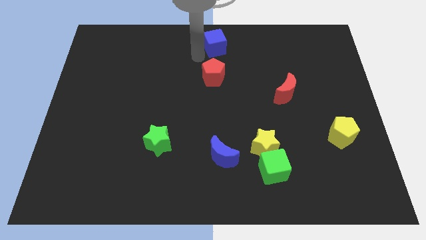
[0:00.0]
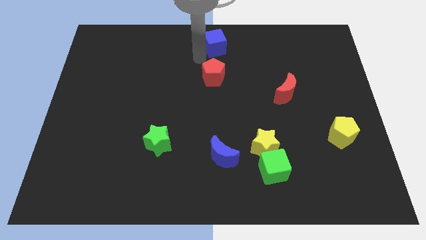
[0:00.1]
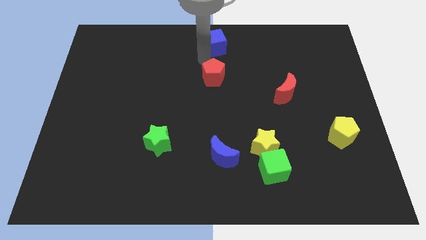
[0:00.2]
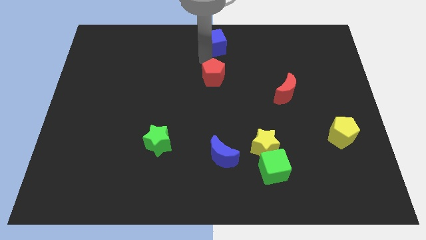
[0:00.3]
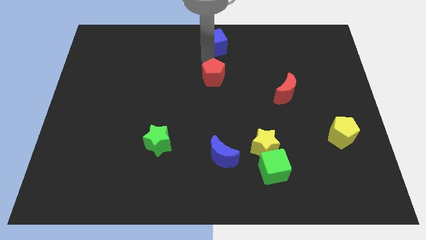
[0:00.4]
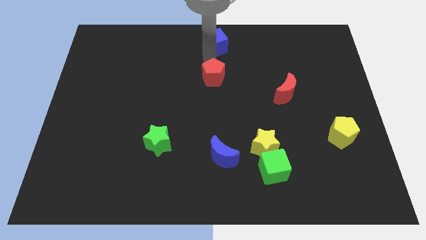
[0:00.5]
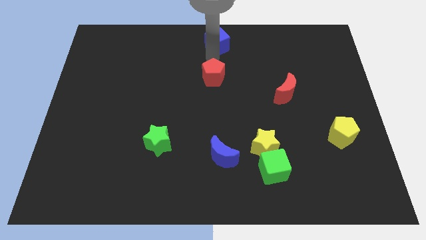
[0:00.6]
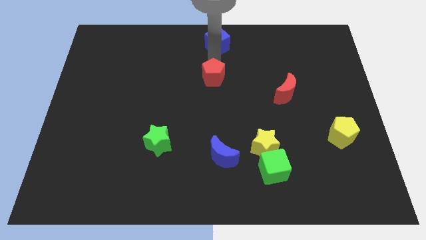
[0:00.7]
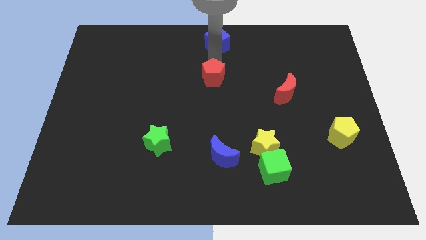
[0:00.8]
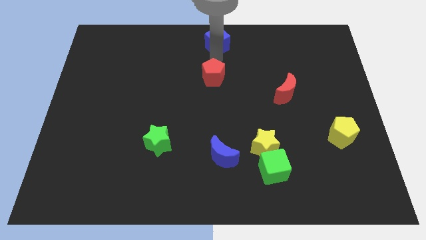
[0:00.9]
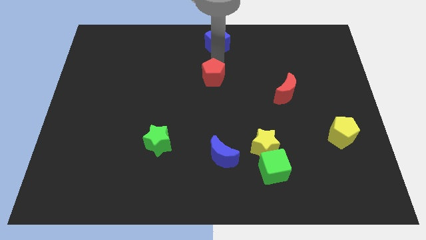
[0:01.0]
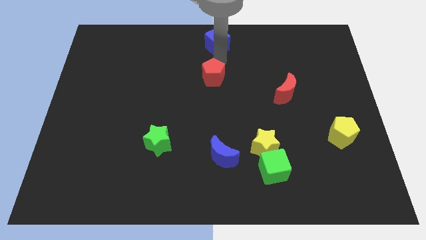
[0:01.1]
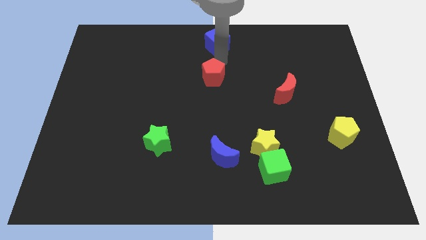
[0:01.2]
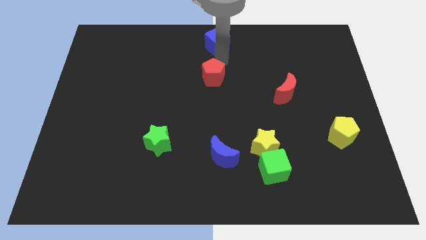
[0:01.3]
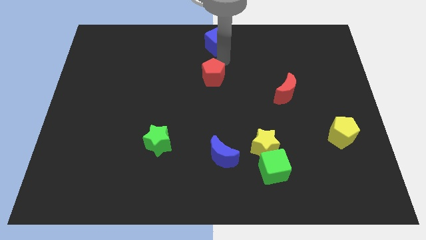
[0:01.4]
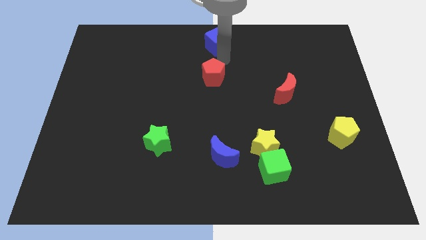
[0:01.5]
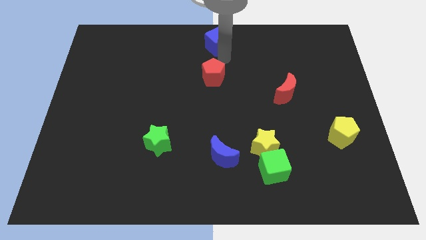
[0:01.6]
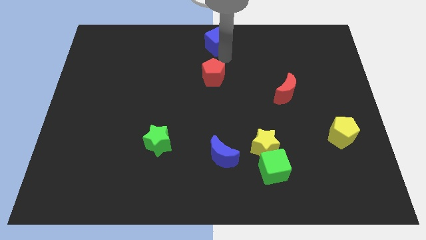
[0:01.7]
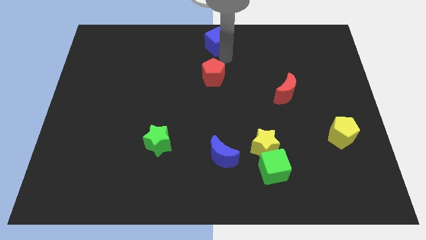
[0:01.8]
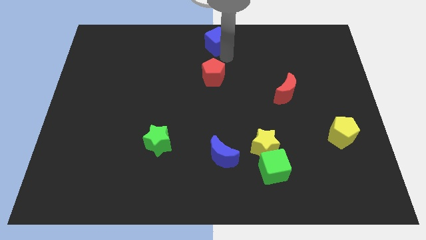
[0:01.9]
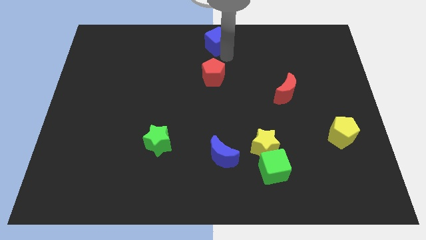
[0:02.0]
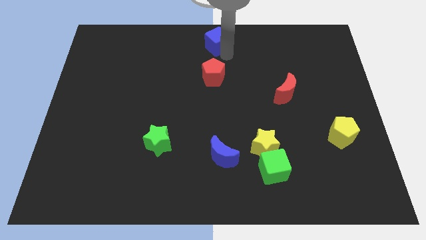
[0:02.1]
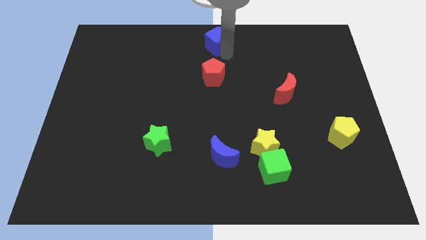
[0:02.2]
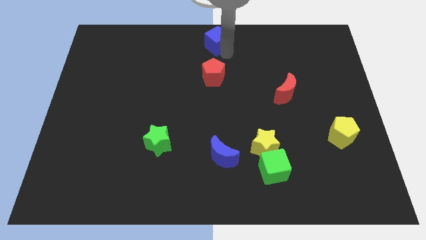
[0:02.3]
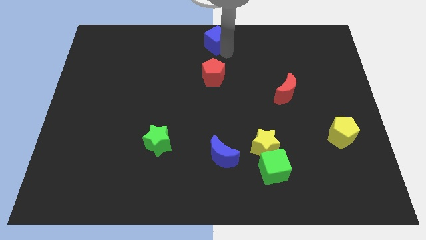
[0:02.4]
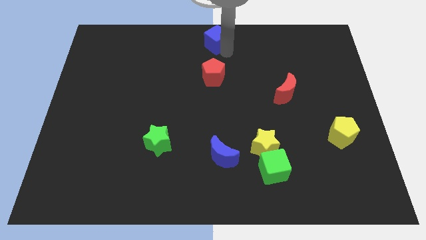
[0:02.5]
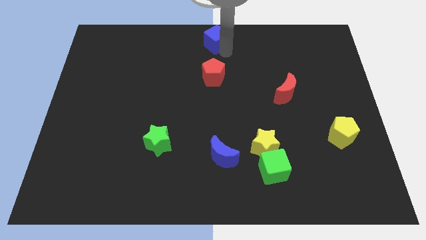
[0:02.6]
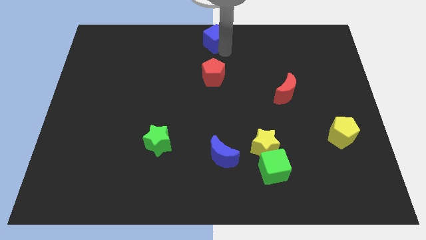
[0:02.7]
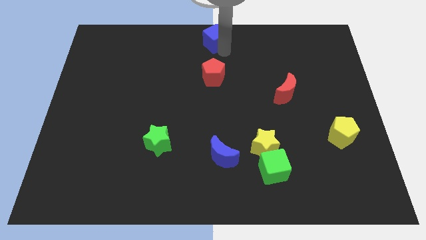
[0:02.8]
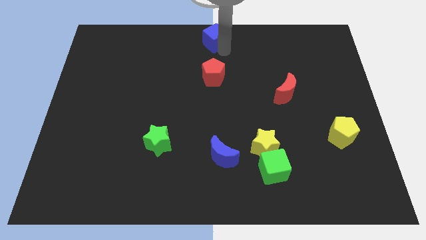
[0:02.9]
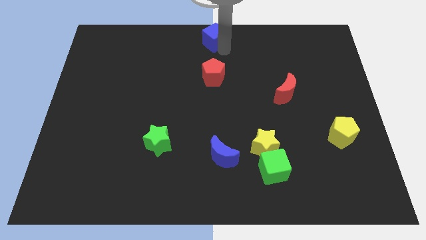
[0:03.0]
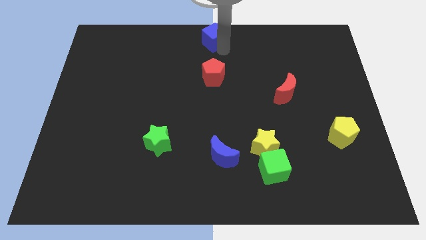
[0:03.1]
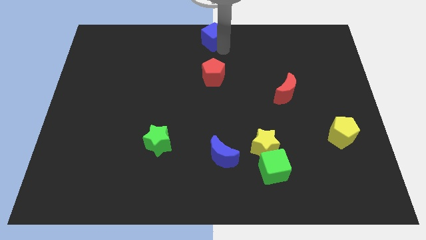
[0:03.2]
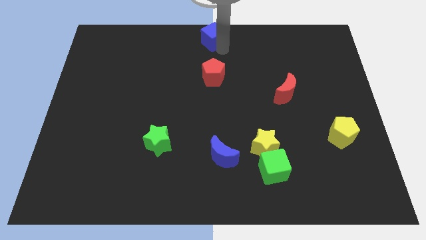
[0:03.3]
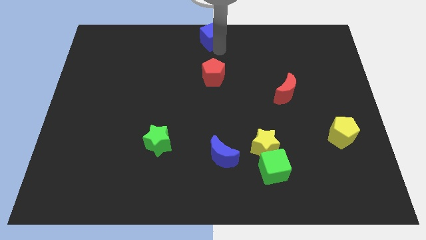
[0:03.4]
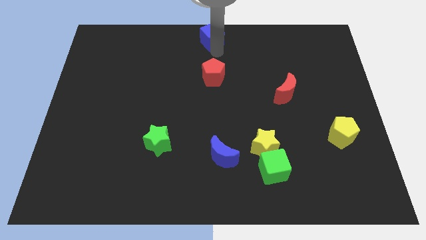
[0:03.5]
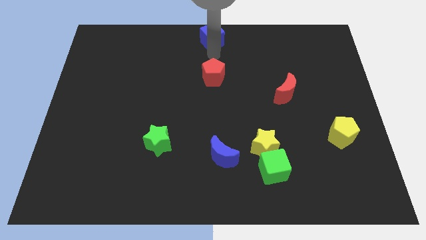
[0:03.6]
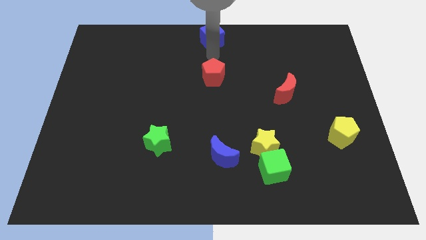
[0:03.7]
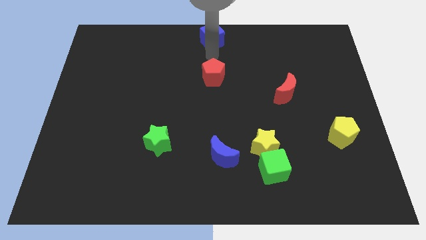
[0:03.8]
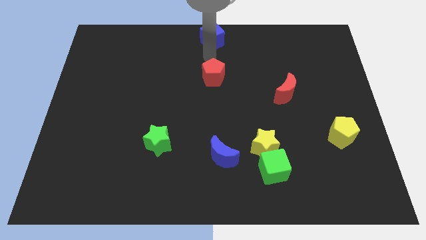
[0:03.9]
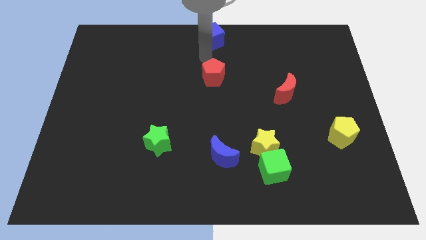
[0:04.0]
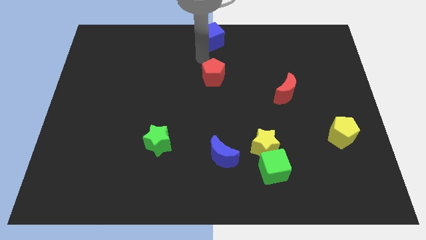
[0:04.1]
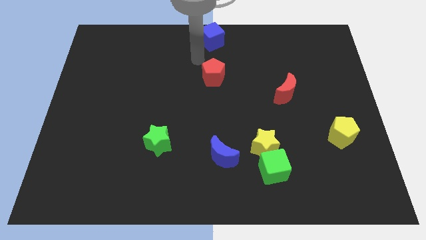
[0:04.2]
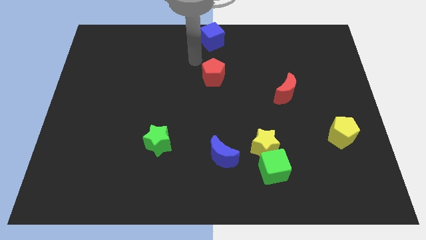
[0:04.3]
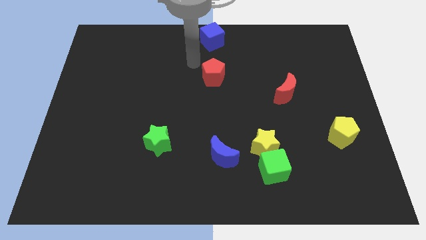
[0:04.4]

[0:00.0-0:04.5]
place the blue cube to the top center

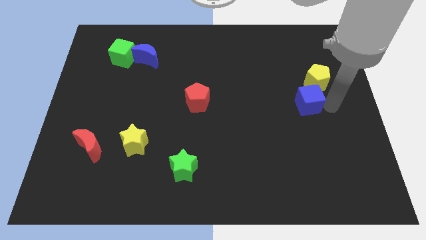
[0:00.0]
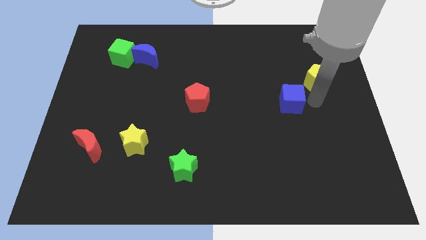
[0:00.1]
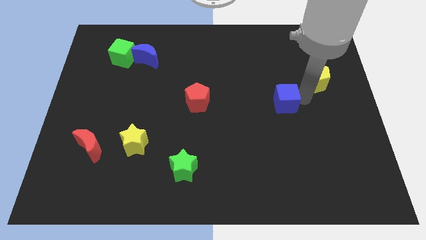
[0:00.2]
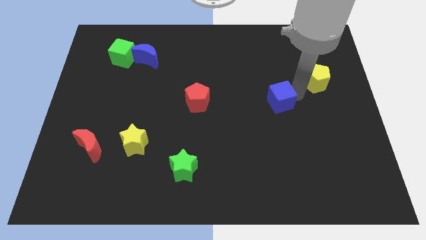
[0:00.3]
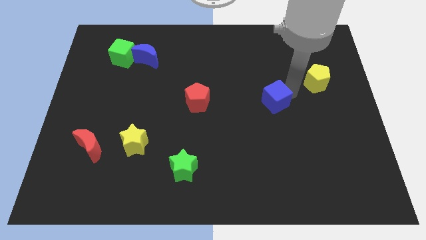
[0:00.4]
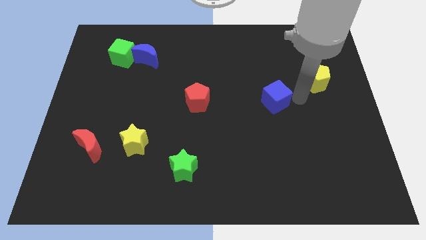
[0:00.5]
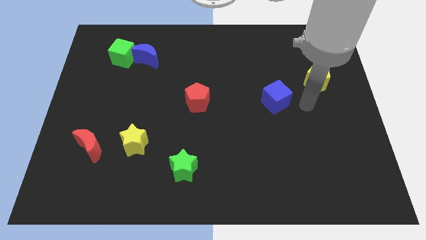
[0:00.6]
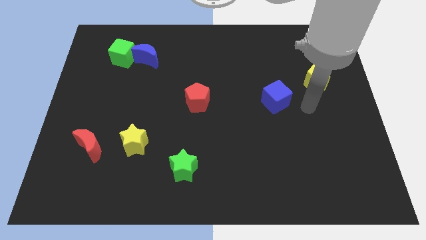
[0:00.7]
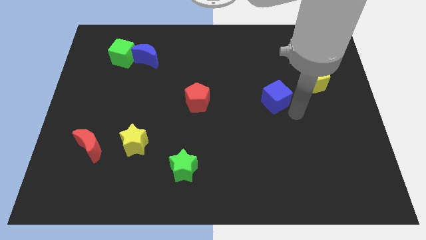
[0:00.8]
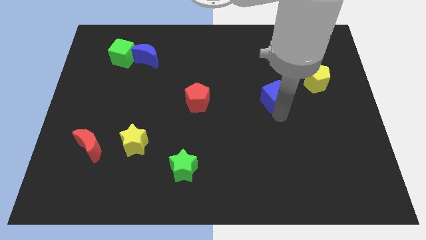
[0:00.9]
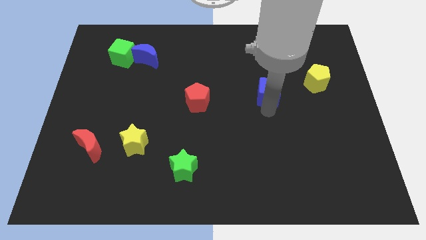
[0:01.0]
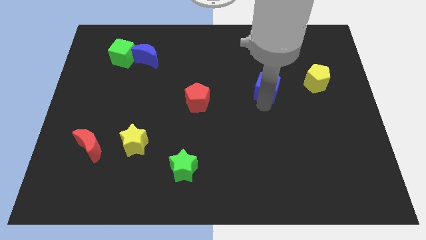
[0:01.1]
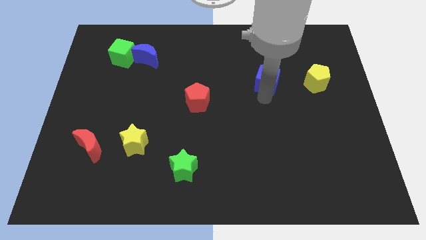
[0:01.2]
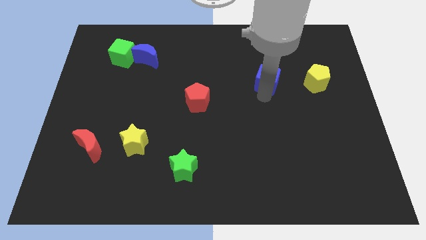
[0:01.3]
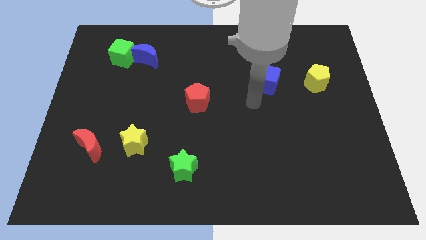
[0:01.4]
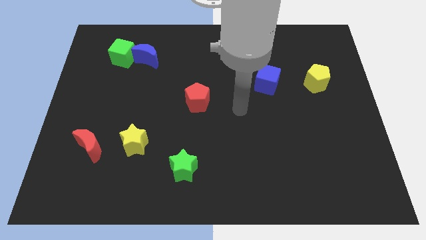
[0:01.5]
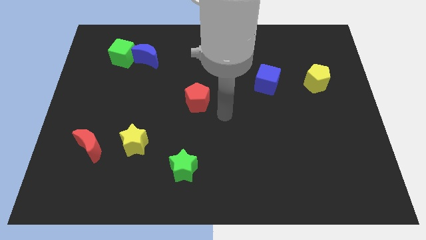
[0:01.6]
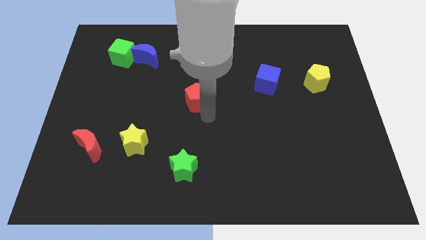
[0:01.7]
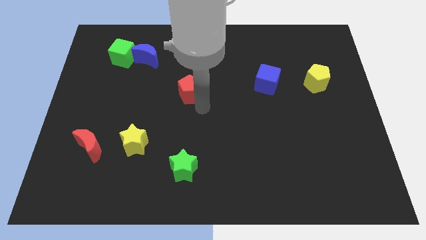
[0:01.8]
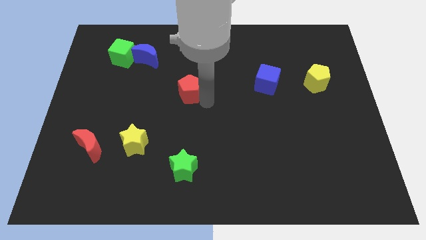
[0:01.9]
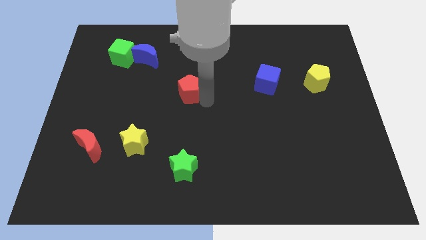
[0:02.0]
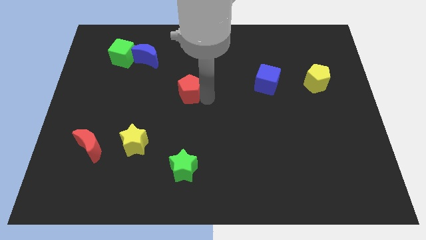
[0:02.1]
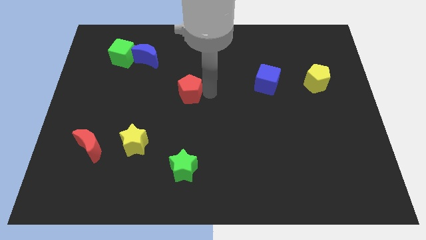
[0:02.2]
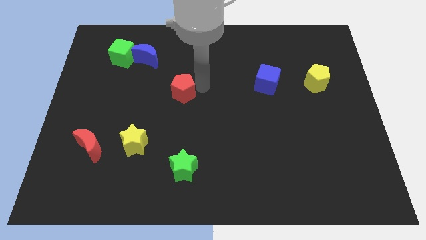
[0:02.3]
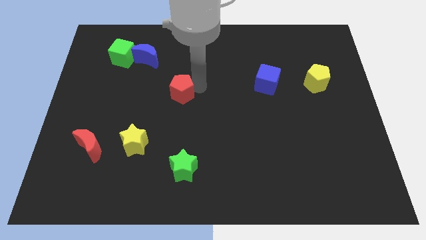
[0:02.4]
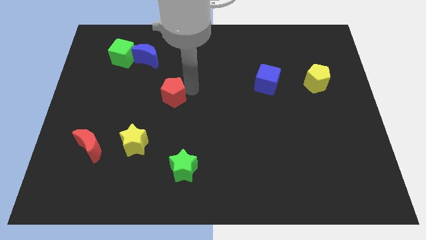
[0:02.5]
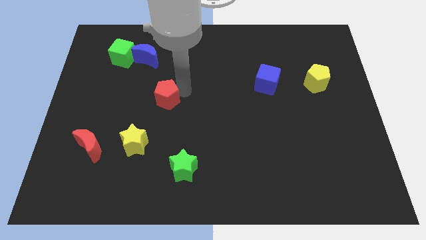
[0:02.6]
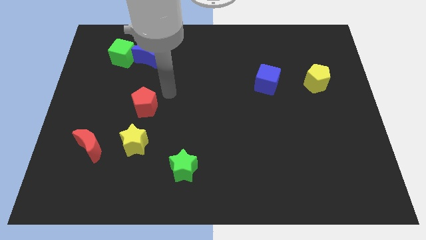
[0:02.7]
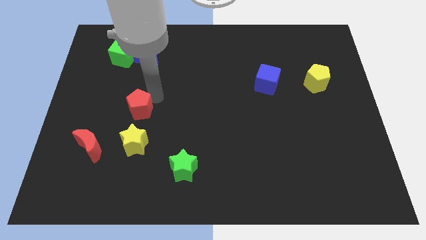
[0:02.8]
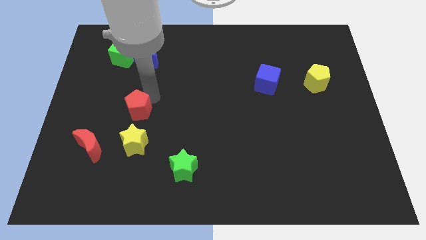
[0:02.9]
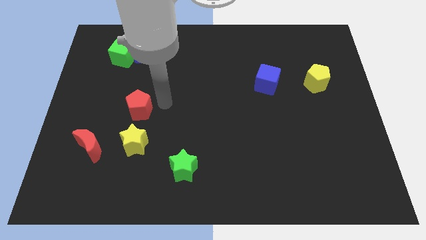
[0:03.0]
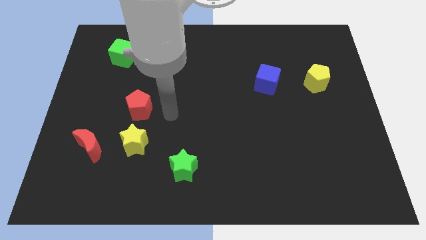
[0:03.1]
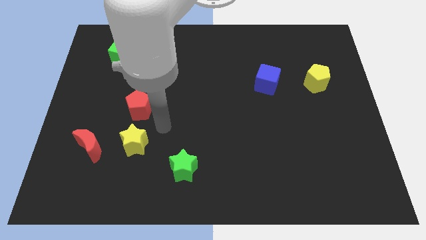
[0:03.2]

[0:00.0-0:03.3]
push red pentagon above yellow star

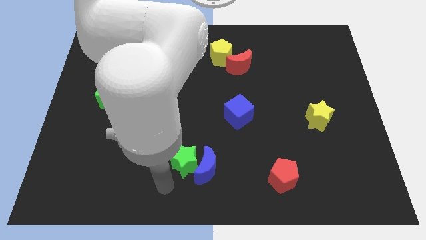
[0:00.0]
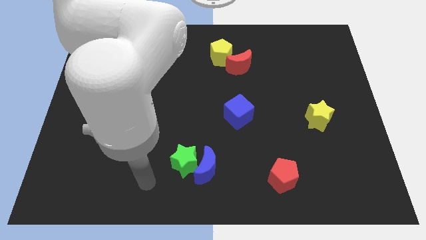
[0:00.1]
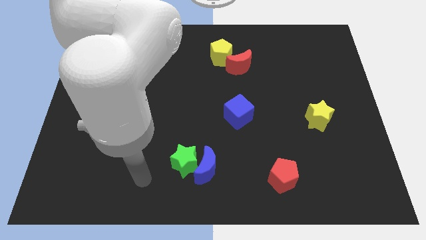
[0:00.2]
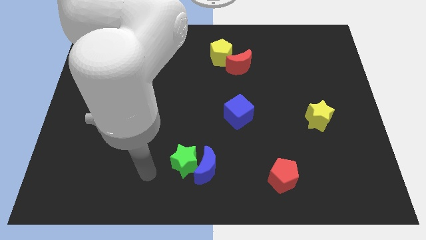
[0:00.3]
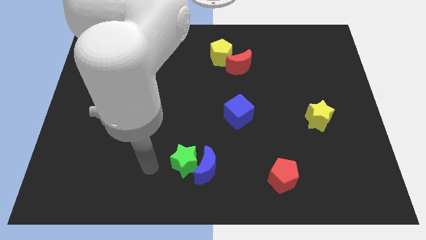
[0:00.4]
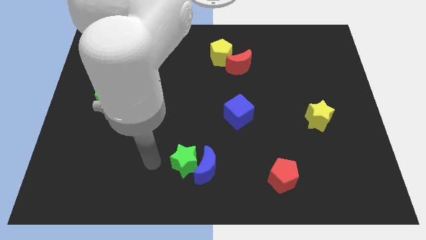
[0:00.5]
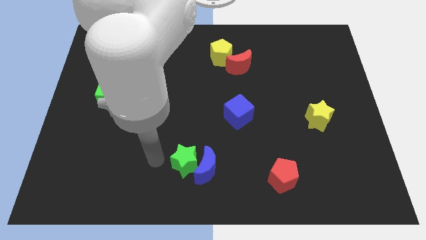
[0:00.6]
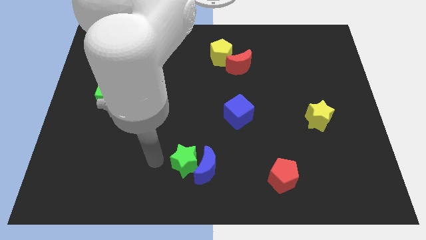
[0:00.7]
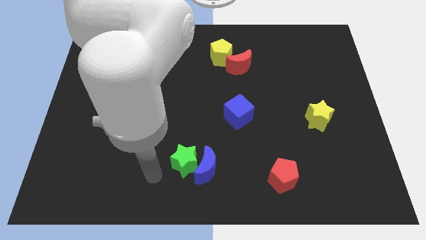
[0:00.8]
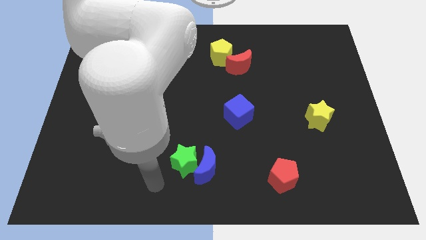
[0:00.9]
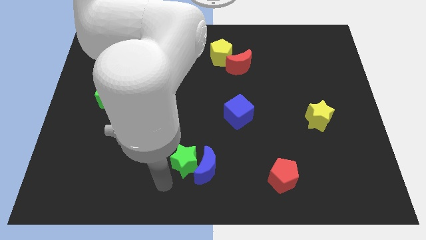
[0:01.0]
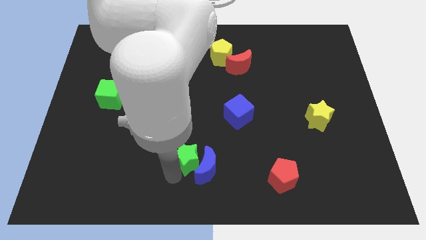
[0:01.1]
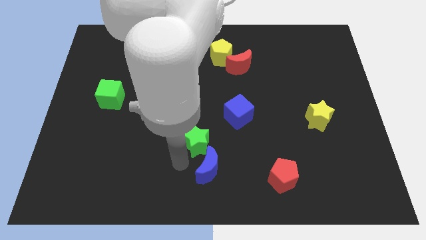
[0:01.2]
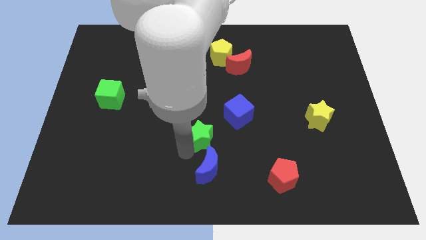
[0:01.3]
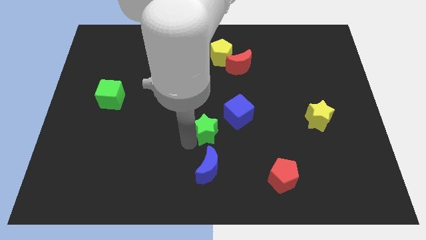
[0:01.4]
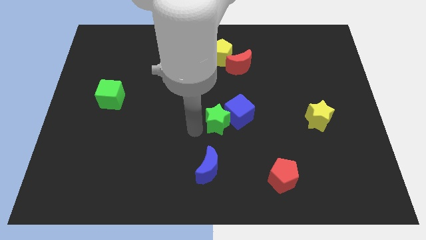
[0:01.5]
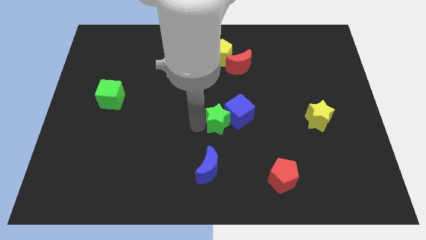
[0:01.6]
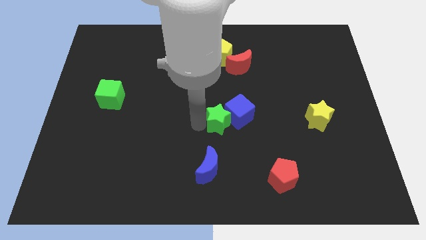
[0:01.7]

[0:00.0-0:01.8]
push the green star into the blue cube
